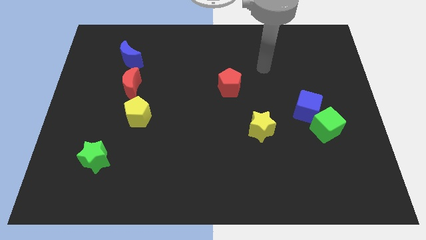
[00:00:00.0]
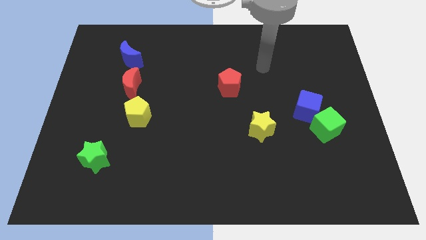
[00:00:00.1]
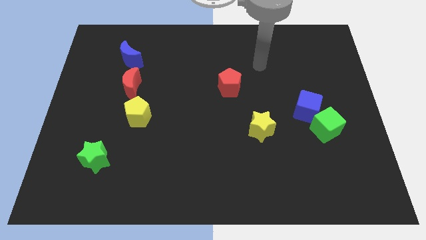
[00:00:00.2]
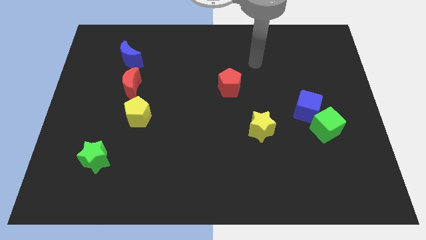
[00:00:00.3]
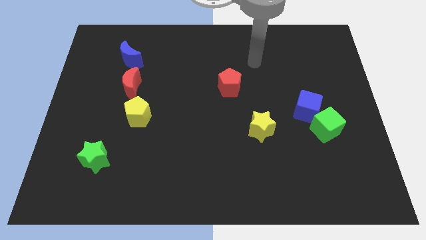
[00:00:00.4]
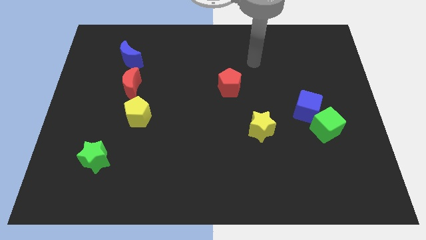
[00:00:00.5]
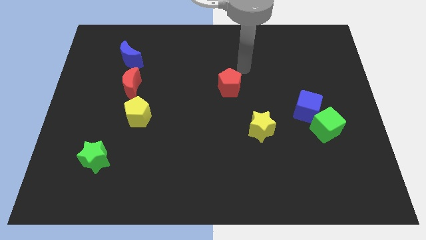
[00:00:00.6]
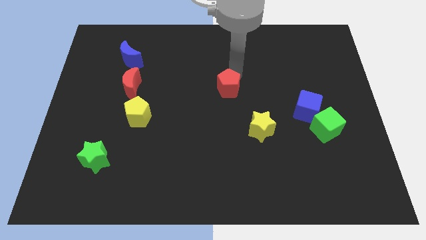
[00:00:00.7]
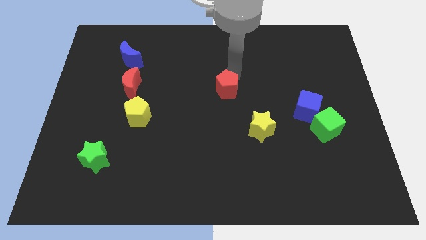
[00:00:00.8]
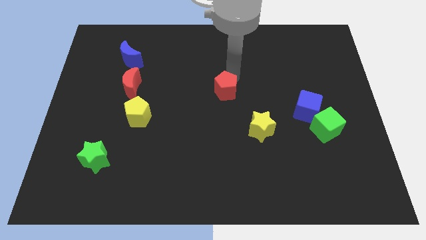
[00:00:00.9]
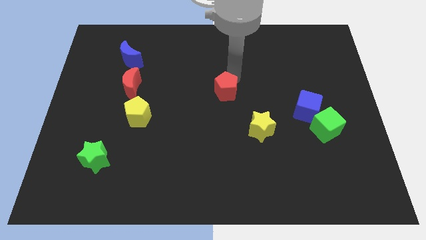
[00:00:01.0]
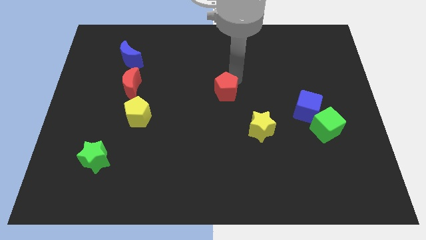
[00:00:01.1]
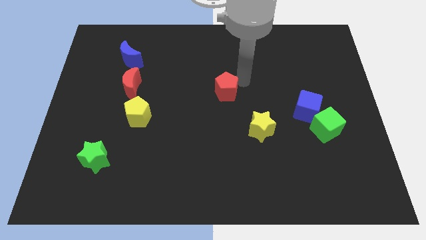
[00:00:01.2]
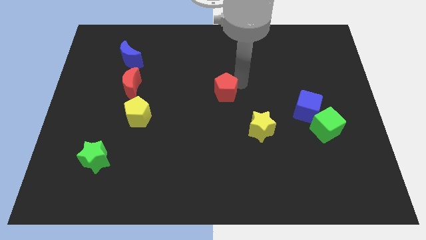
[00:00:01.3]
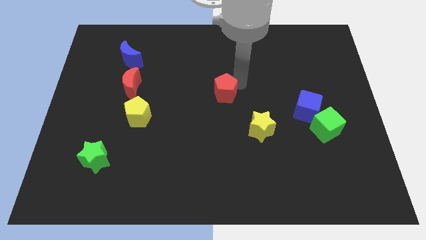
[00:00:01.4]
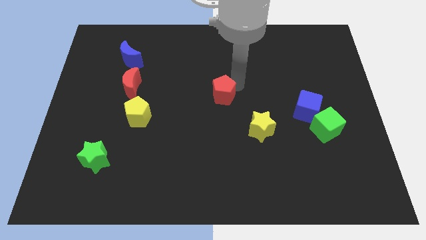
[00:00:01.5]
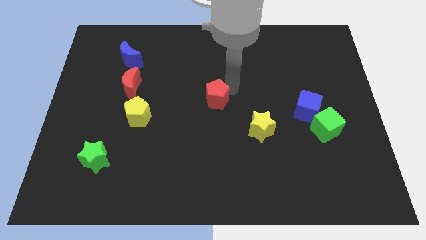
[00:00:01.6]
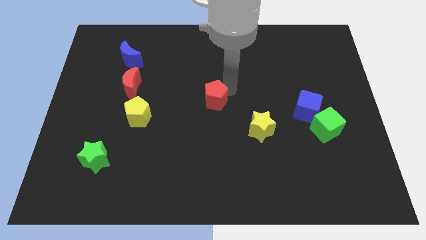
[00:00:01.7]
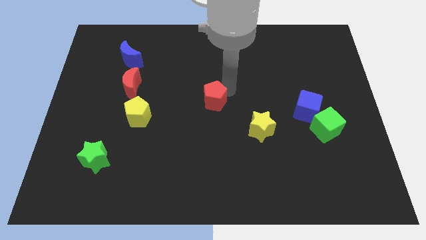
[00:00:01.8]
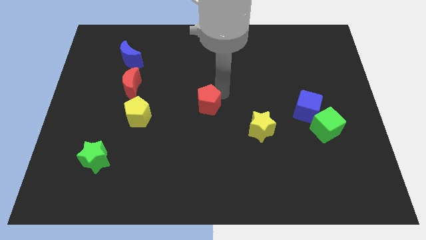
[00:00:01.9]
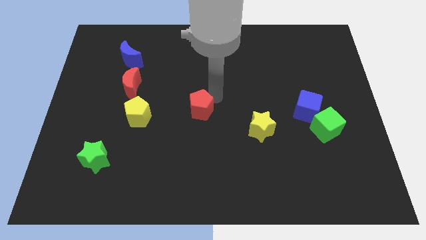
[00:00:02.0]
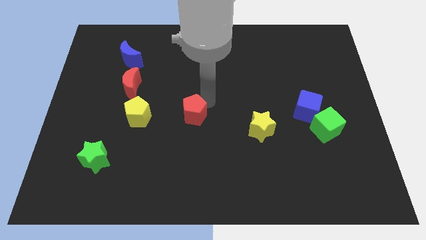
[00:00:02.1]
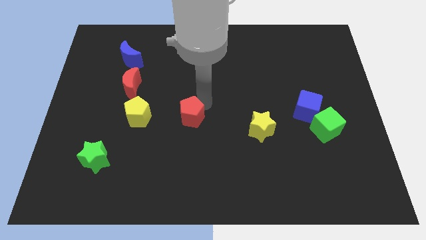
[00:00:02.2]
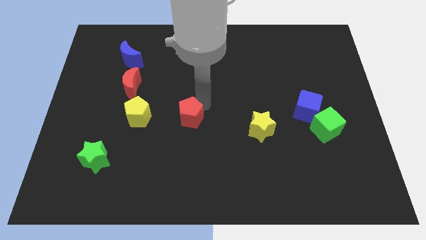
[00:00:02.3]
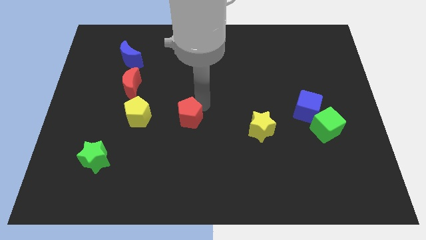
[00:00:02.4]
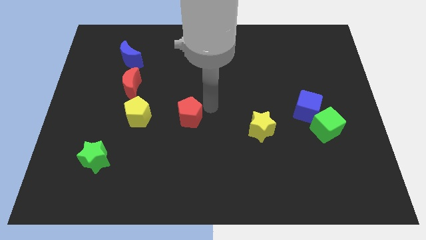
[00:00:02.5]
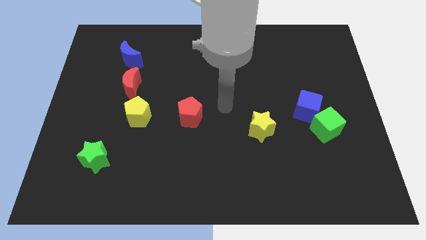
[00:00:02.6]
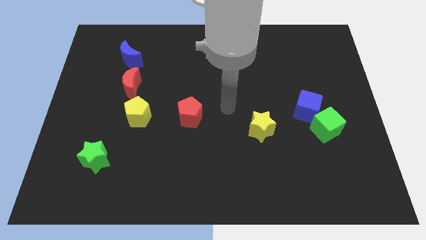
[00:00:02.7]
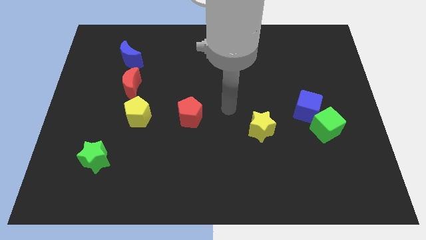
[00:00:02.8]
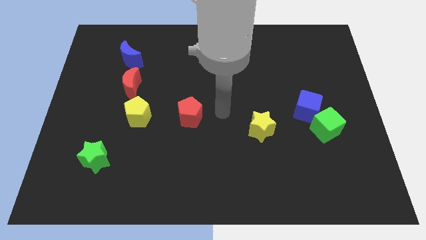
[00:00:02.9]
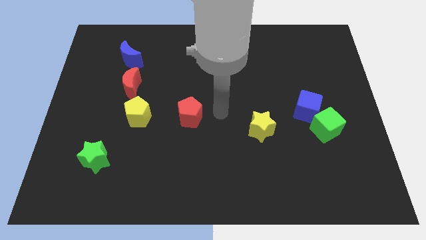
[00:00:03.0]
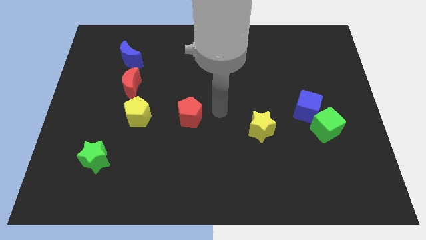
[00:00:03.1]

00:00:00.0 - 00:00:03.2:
move red pentagon in between yellow blocks

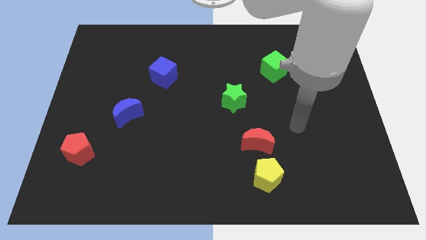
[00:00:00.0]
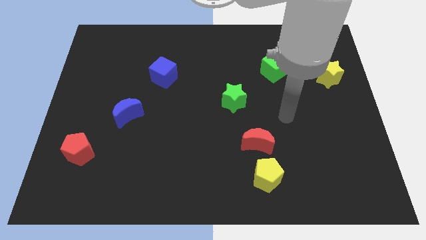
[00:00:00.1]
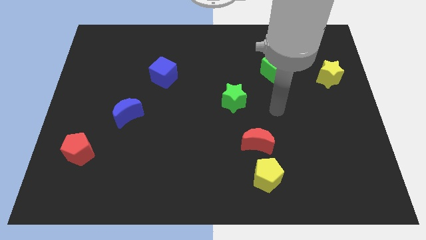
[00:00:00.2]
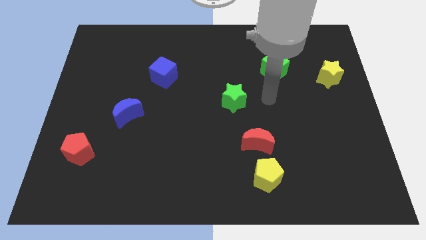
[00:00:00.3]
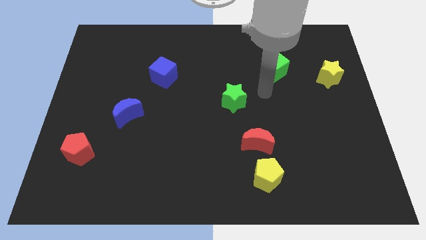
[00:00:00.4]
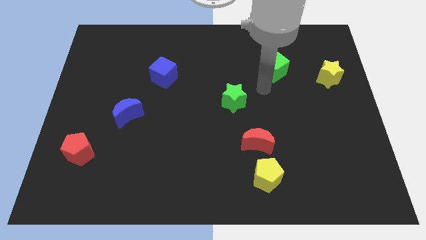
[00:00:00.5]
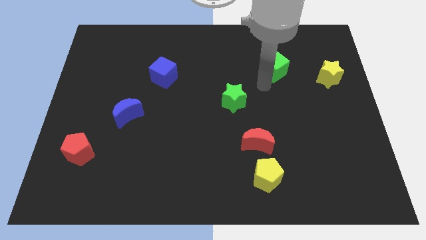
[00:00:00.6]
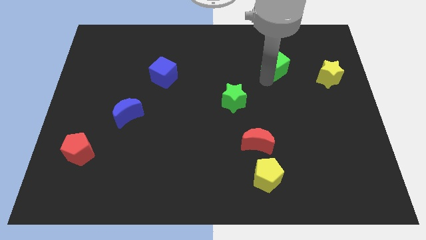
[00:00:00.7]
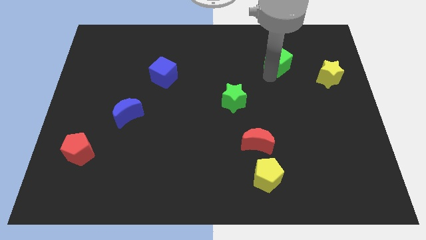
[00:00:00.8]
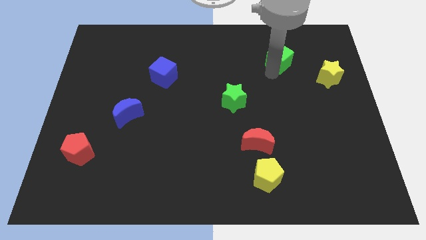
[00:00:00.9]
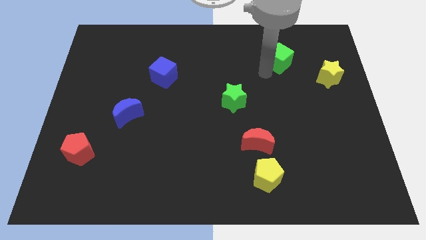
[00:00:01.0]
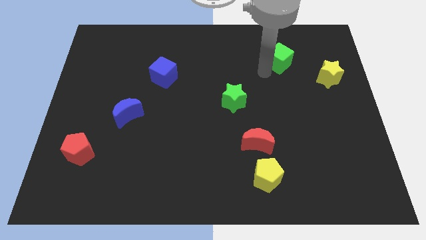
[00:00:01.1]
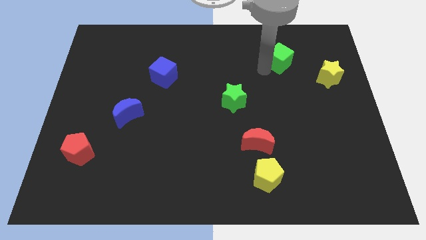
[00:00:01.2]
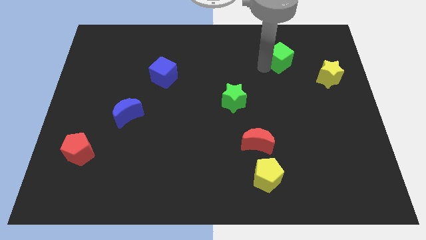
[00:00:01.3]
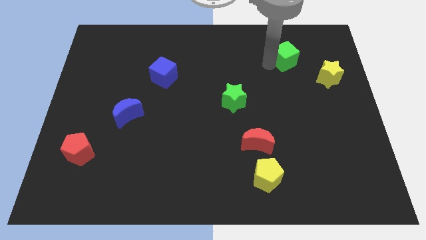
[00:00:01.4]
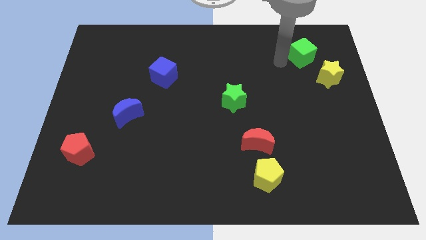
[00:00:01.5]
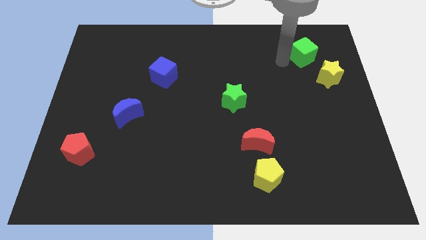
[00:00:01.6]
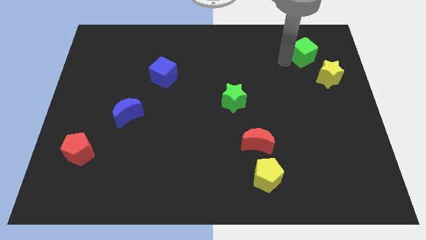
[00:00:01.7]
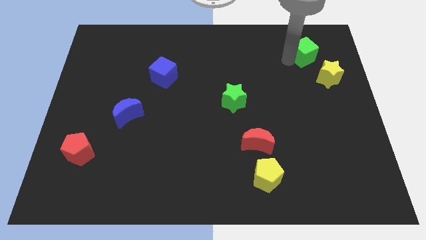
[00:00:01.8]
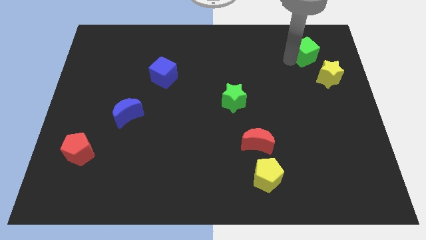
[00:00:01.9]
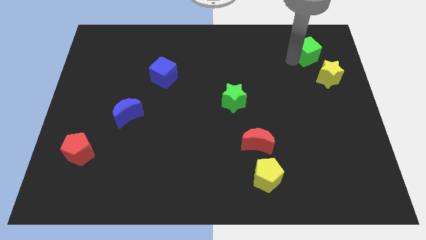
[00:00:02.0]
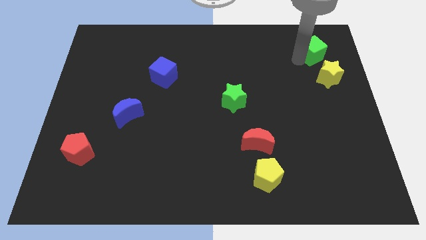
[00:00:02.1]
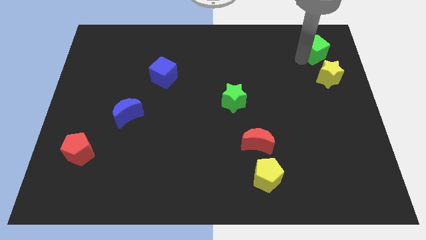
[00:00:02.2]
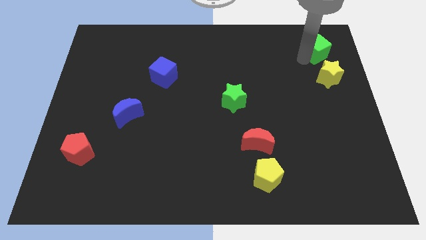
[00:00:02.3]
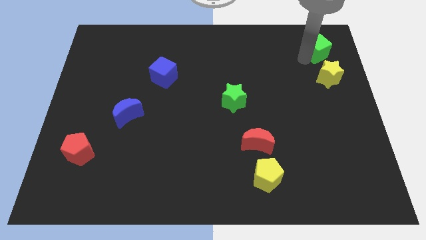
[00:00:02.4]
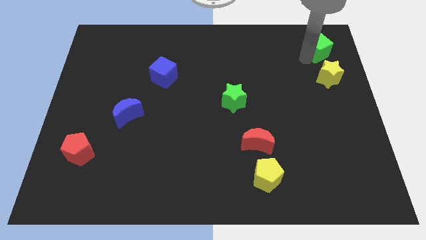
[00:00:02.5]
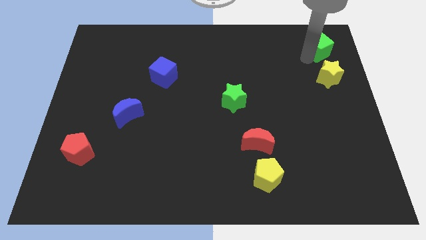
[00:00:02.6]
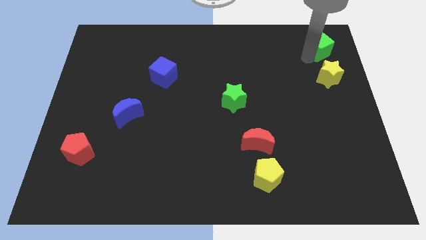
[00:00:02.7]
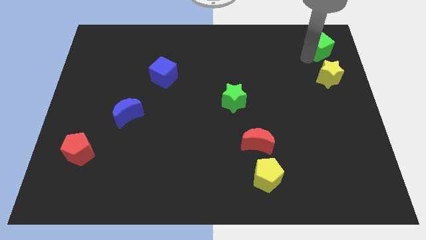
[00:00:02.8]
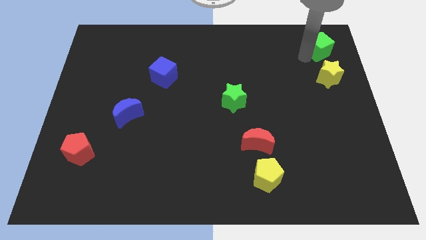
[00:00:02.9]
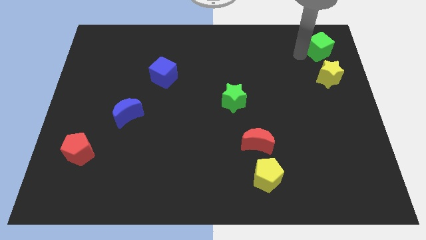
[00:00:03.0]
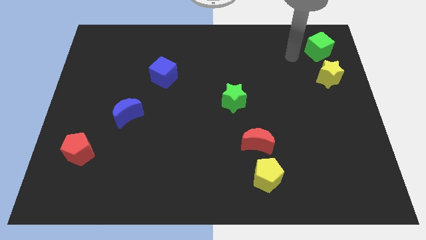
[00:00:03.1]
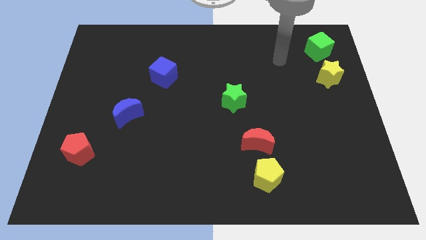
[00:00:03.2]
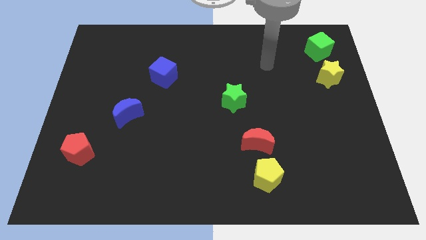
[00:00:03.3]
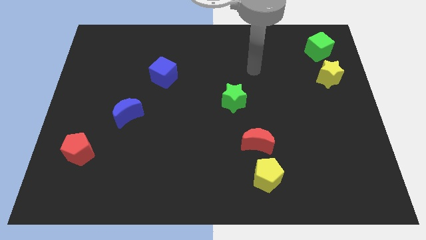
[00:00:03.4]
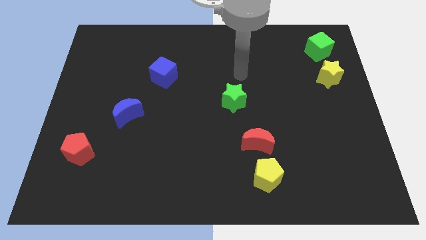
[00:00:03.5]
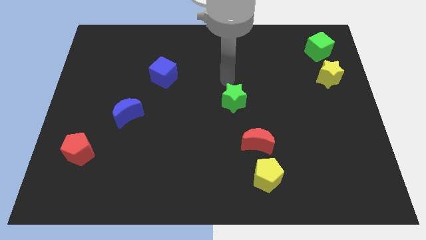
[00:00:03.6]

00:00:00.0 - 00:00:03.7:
place green cube above yellow star

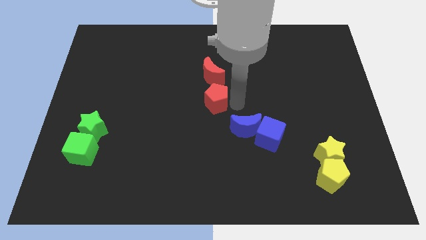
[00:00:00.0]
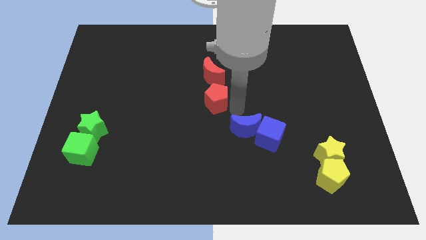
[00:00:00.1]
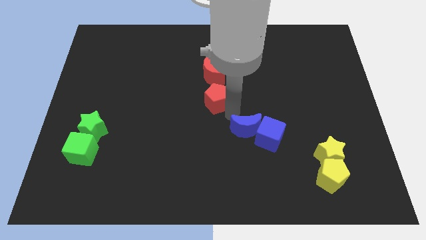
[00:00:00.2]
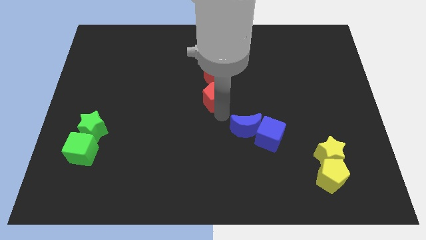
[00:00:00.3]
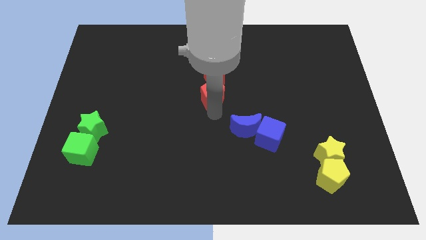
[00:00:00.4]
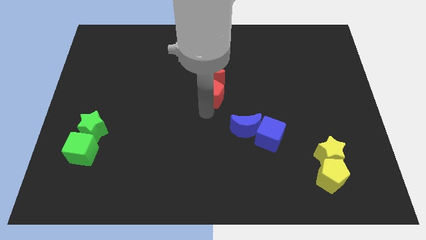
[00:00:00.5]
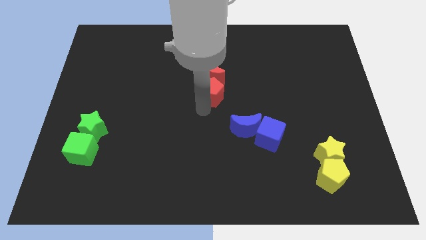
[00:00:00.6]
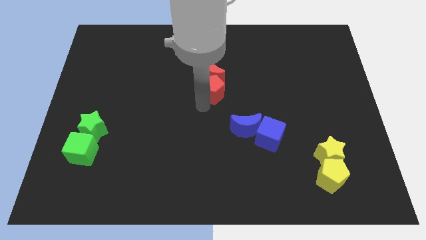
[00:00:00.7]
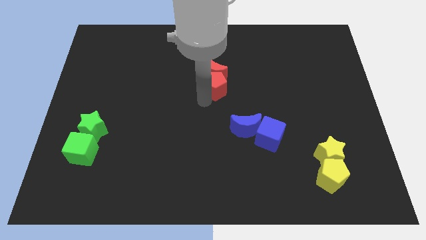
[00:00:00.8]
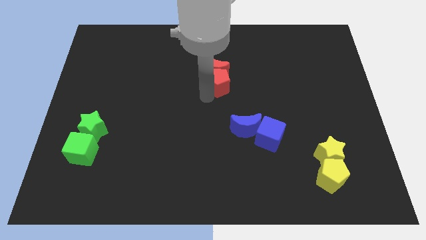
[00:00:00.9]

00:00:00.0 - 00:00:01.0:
push the red pentagon into the red crescent from the bottom

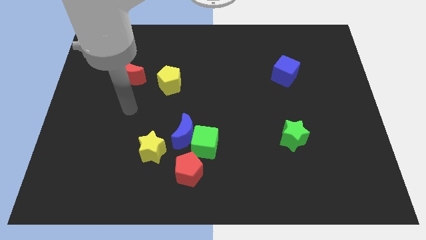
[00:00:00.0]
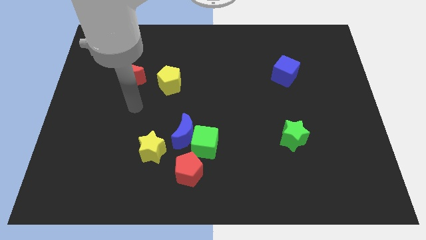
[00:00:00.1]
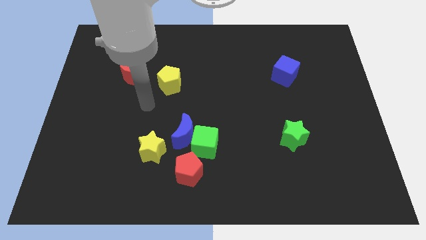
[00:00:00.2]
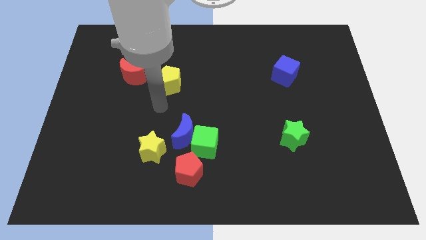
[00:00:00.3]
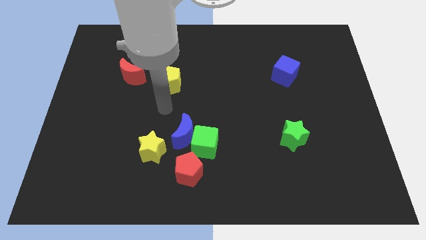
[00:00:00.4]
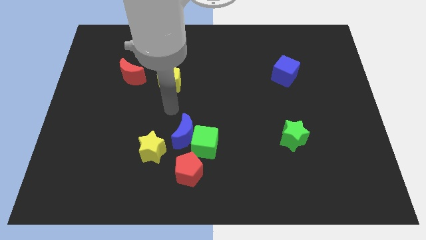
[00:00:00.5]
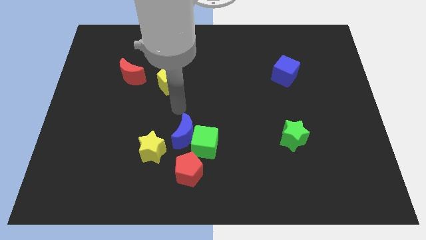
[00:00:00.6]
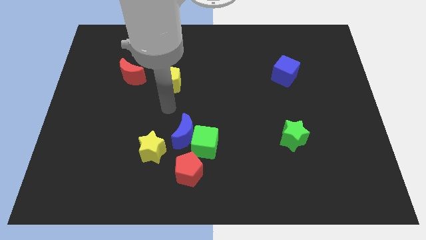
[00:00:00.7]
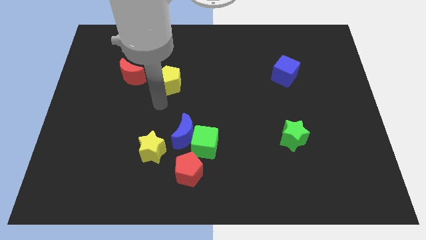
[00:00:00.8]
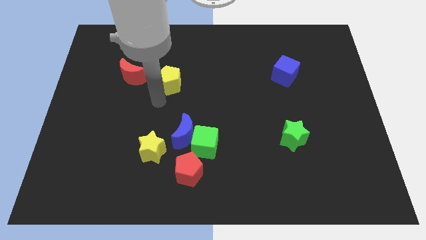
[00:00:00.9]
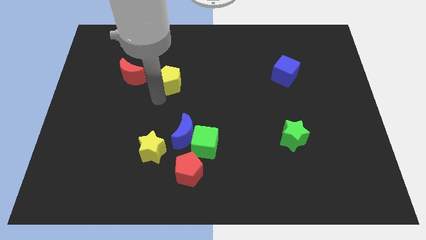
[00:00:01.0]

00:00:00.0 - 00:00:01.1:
move your arm towards the yellow pentagon
